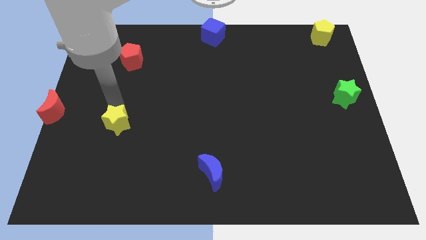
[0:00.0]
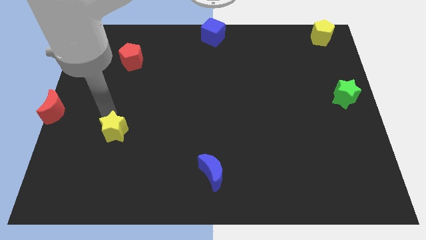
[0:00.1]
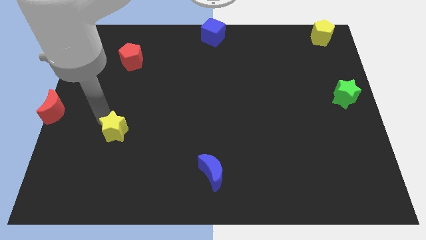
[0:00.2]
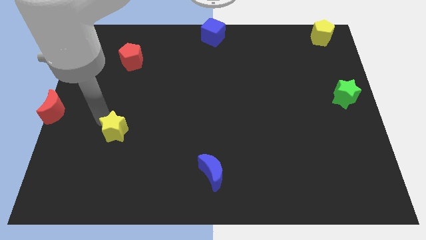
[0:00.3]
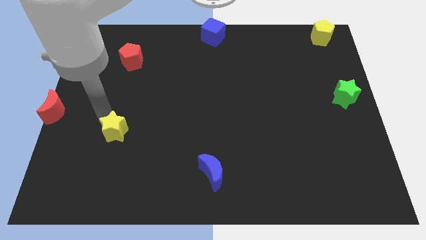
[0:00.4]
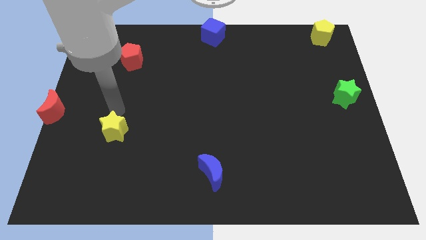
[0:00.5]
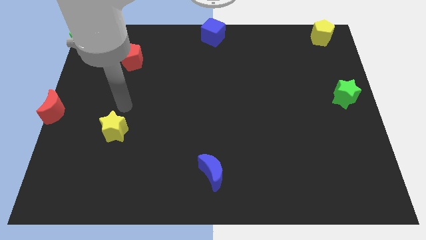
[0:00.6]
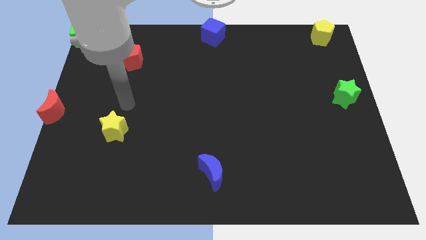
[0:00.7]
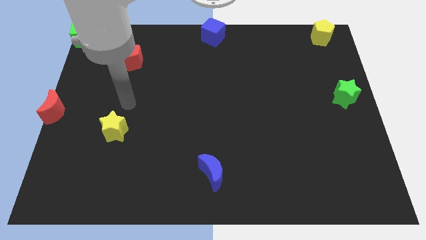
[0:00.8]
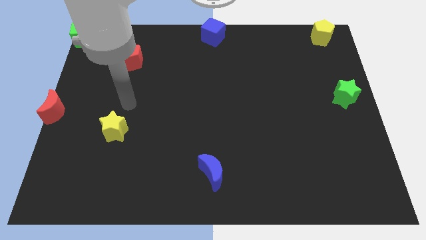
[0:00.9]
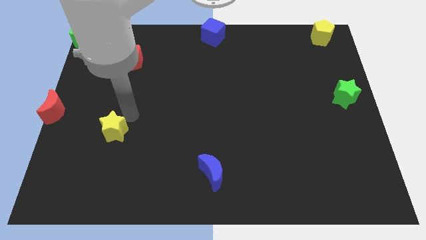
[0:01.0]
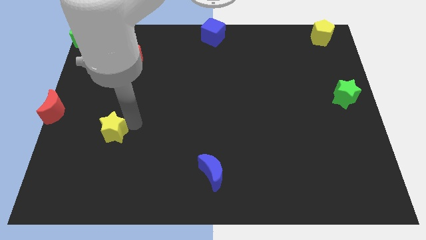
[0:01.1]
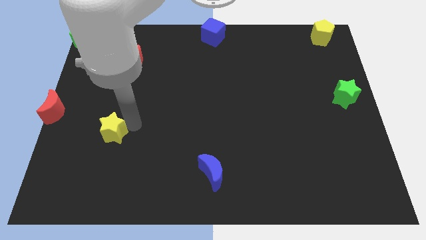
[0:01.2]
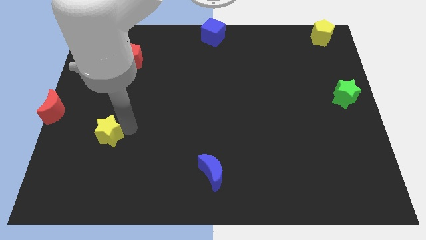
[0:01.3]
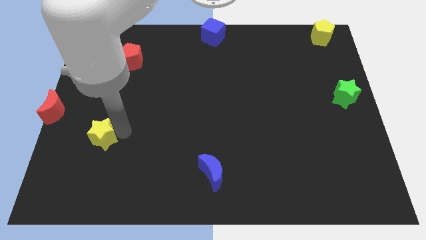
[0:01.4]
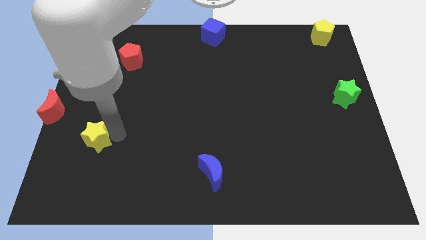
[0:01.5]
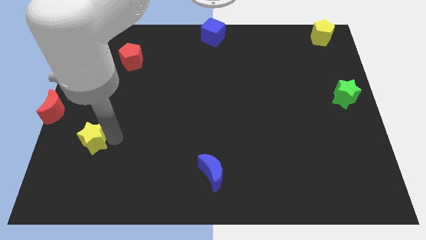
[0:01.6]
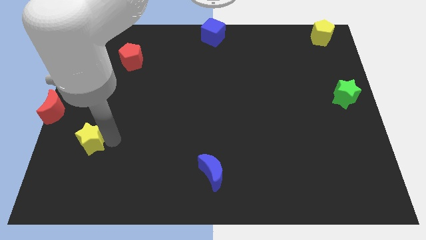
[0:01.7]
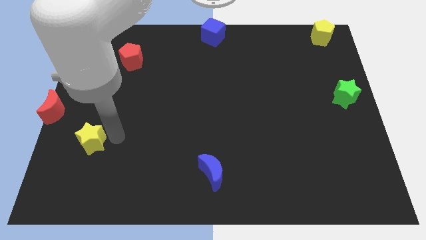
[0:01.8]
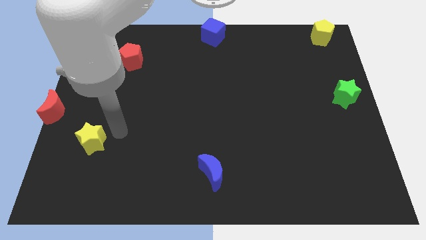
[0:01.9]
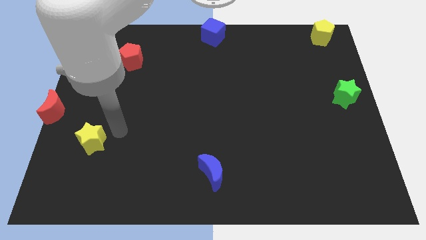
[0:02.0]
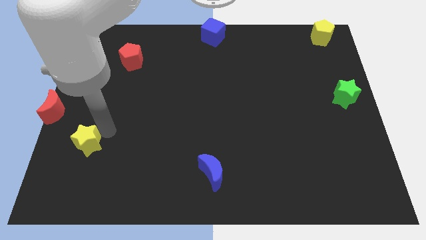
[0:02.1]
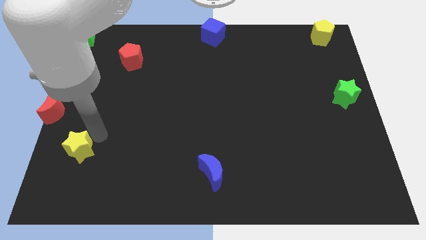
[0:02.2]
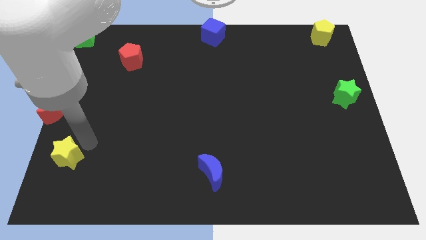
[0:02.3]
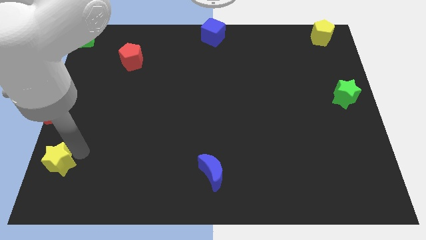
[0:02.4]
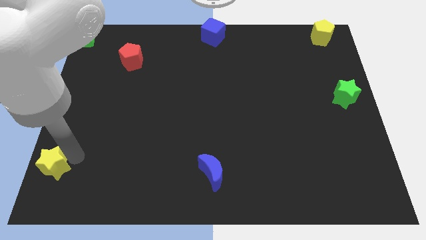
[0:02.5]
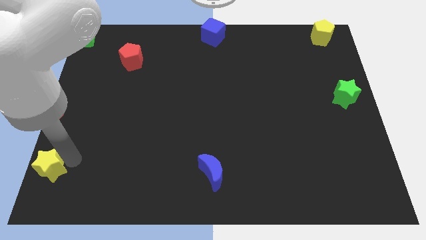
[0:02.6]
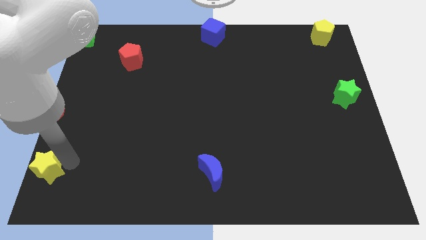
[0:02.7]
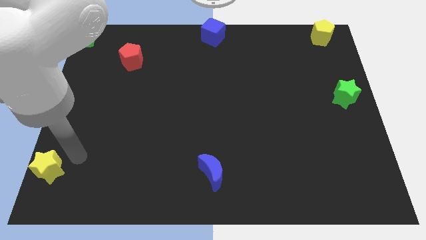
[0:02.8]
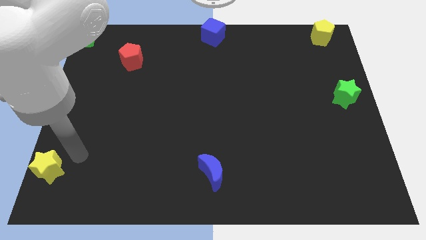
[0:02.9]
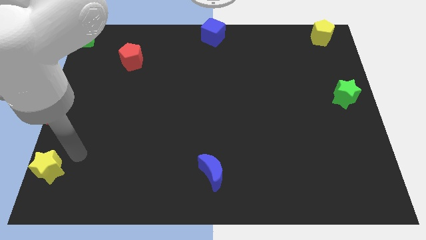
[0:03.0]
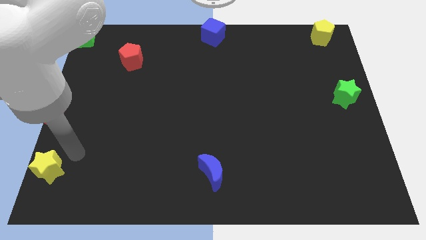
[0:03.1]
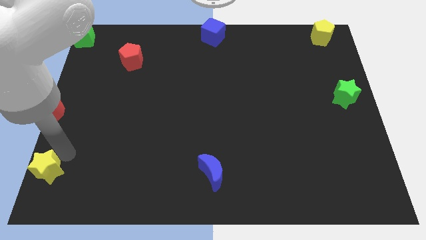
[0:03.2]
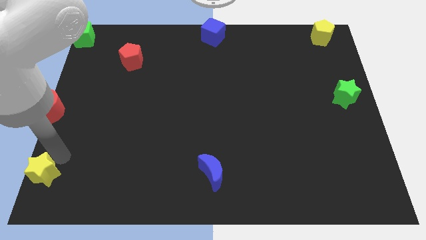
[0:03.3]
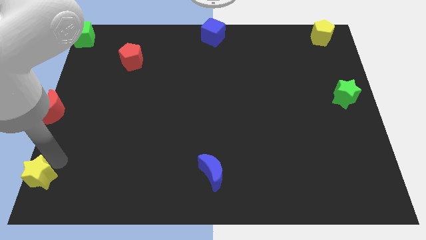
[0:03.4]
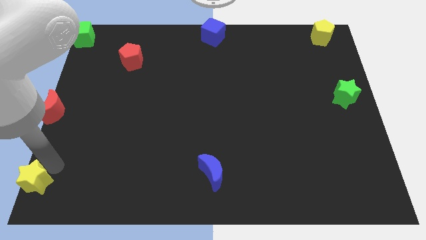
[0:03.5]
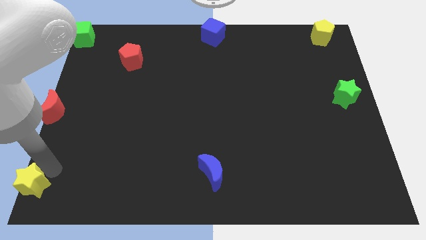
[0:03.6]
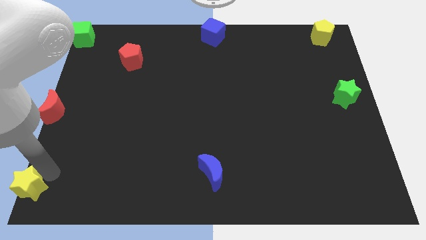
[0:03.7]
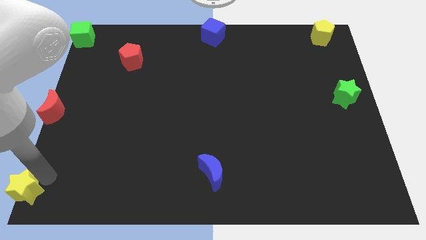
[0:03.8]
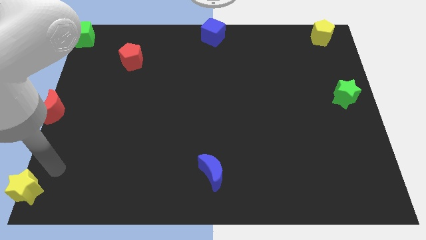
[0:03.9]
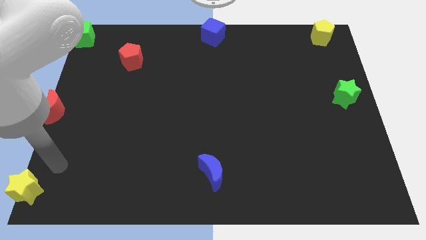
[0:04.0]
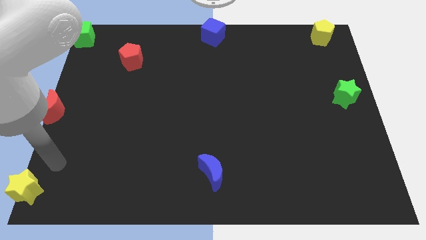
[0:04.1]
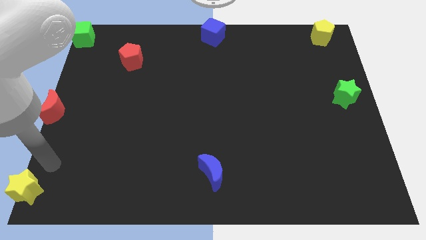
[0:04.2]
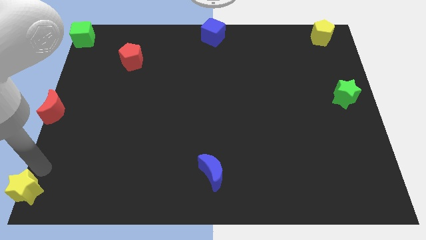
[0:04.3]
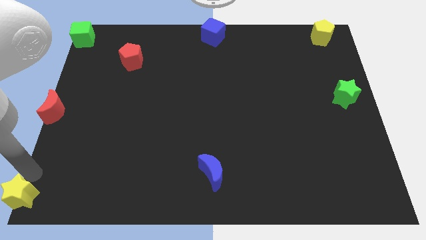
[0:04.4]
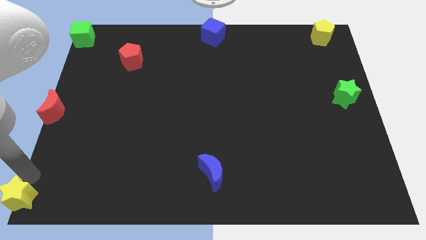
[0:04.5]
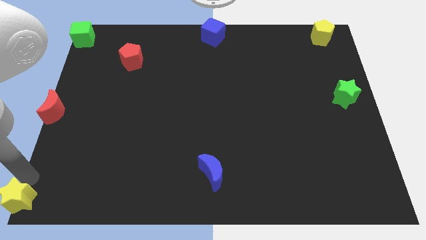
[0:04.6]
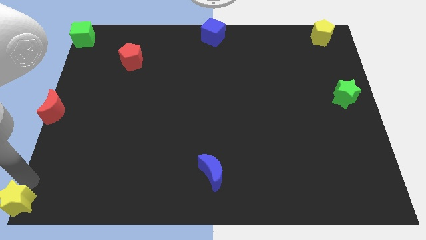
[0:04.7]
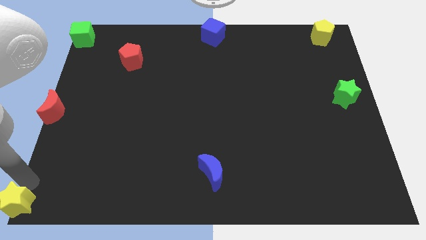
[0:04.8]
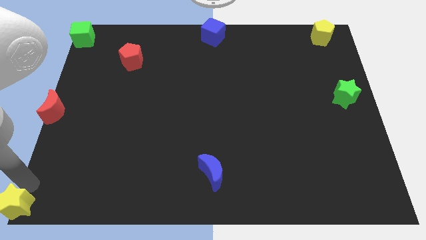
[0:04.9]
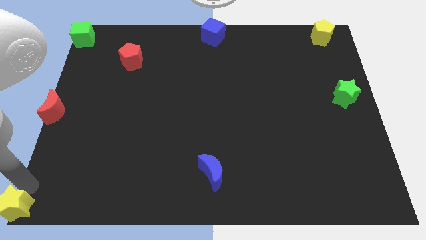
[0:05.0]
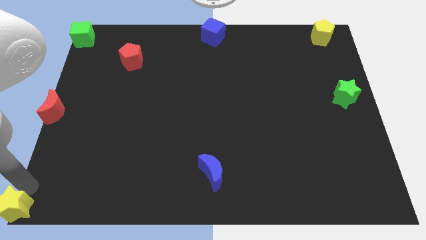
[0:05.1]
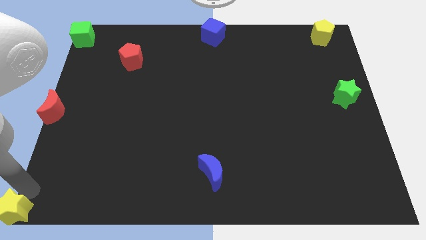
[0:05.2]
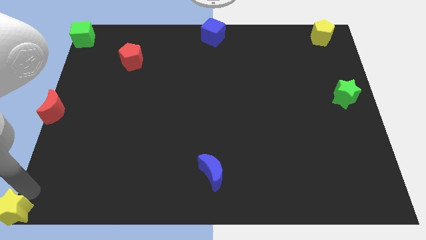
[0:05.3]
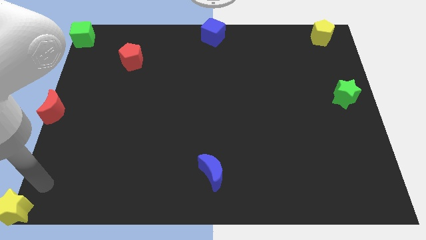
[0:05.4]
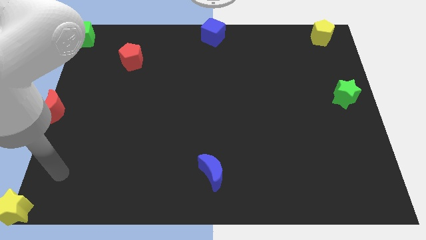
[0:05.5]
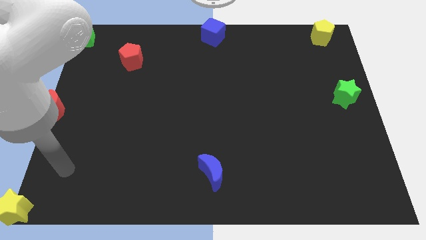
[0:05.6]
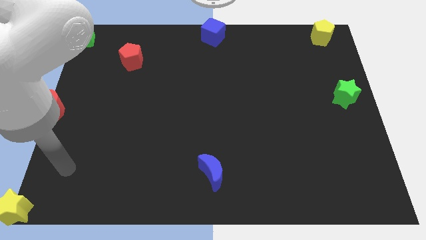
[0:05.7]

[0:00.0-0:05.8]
place the yellow star at the bottom left corner of the board

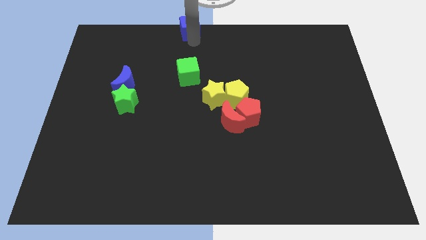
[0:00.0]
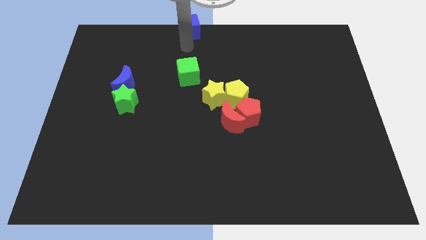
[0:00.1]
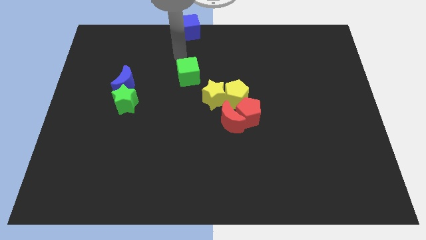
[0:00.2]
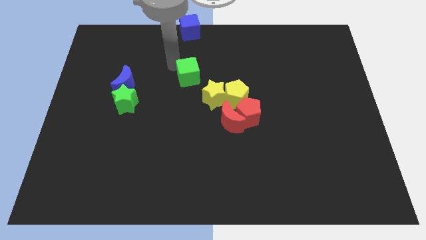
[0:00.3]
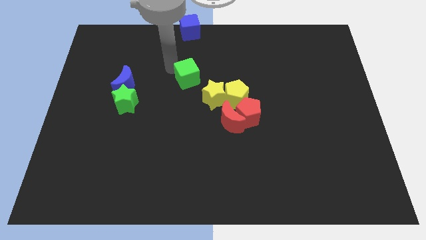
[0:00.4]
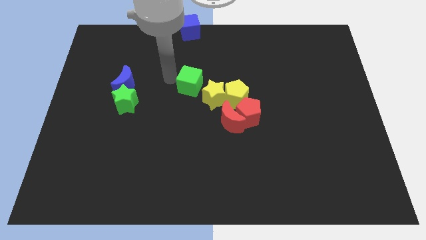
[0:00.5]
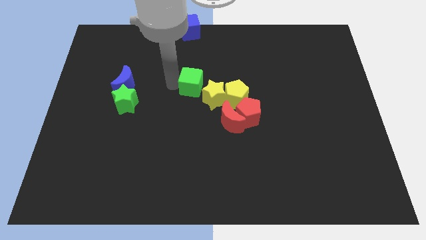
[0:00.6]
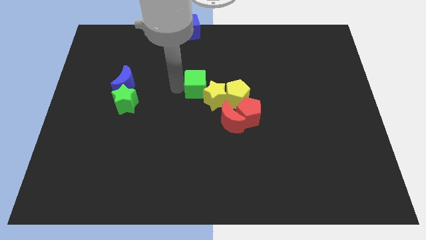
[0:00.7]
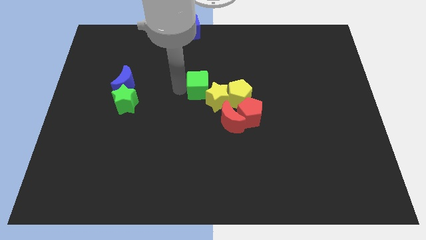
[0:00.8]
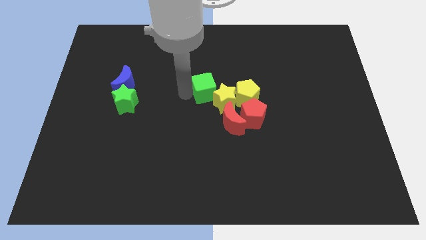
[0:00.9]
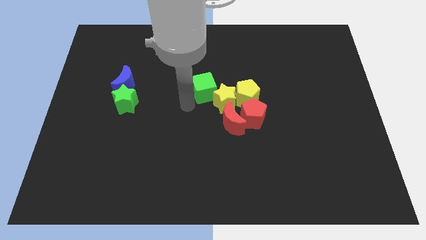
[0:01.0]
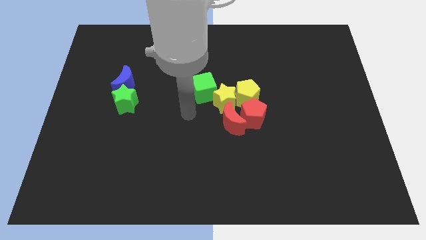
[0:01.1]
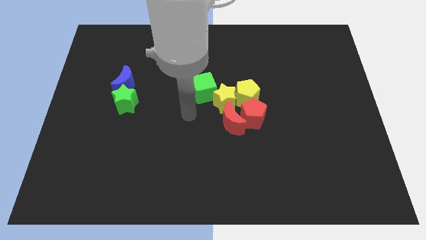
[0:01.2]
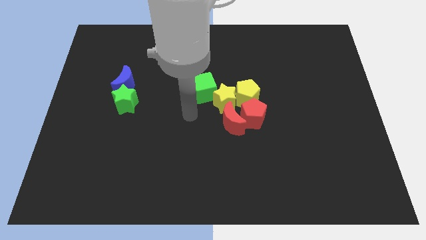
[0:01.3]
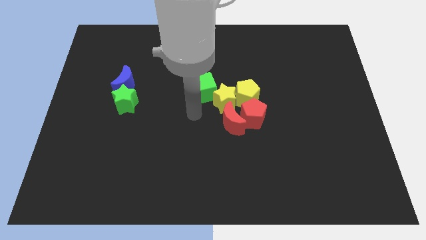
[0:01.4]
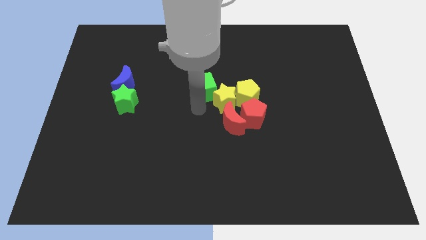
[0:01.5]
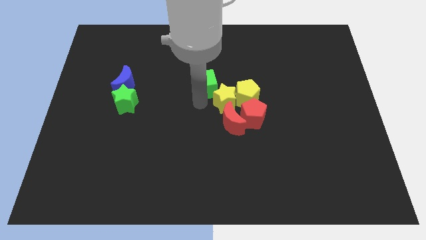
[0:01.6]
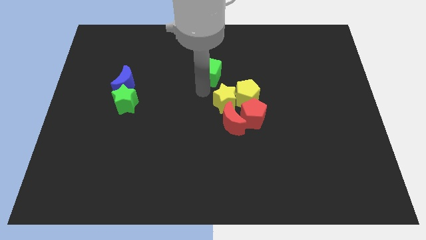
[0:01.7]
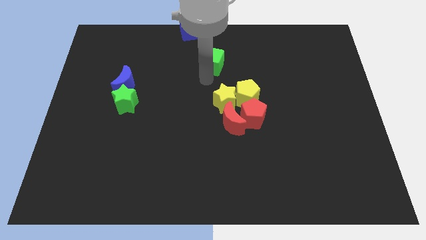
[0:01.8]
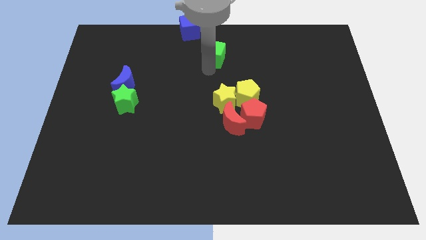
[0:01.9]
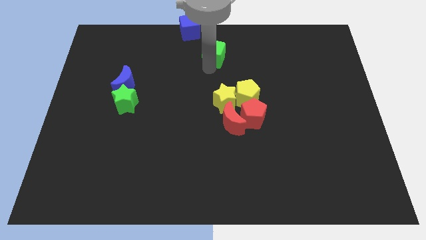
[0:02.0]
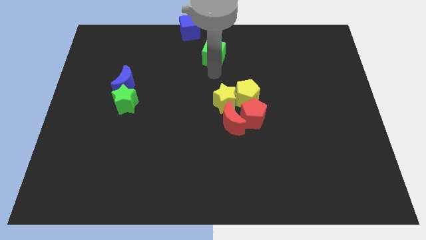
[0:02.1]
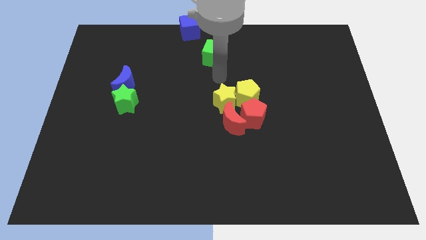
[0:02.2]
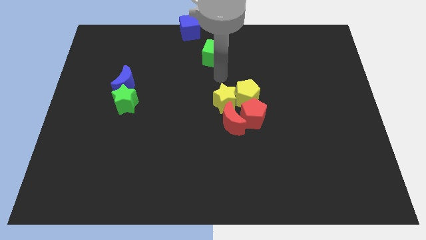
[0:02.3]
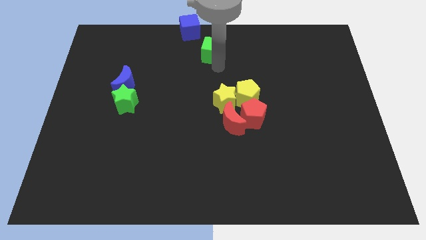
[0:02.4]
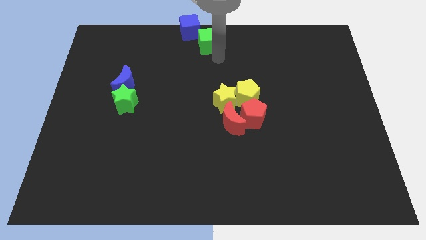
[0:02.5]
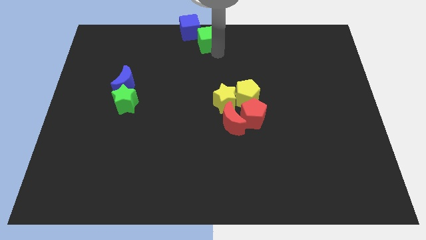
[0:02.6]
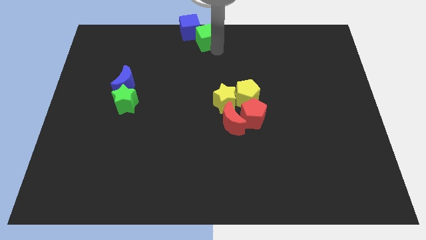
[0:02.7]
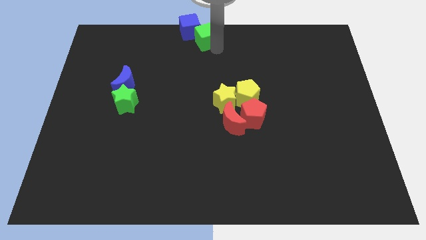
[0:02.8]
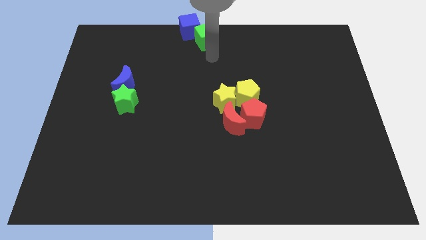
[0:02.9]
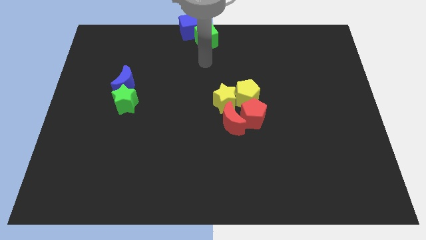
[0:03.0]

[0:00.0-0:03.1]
push the green cube into the bottom side of the blue cube
